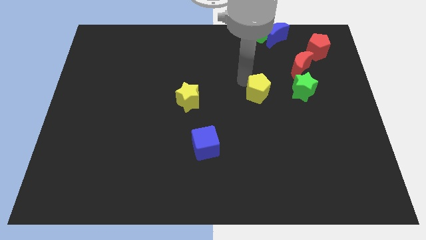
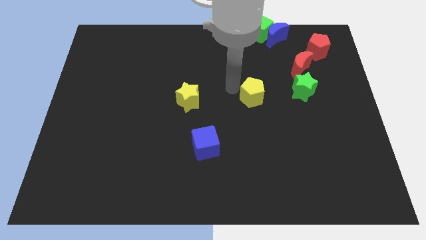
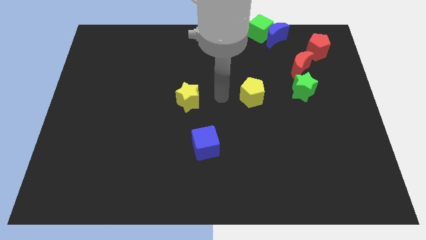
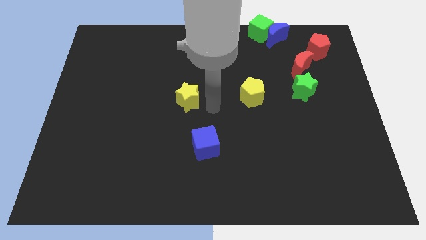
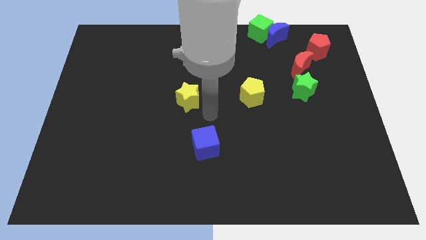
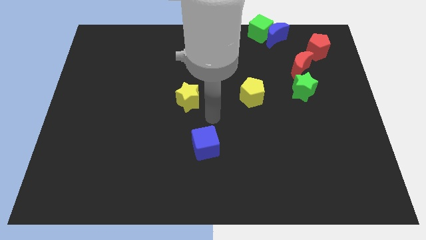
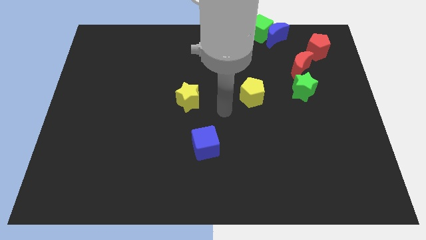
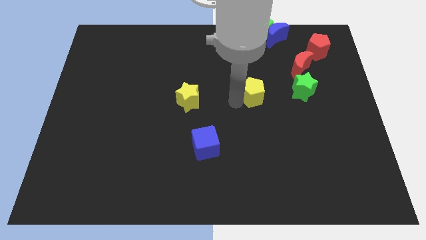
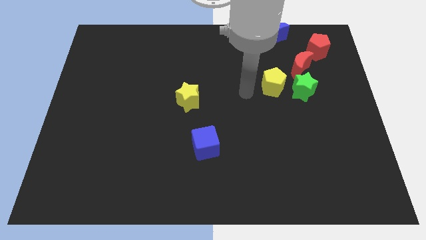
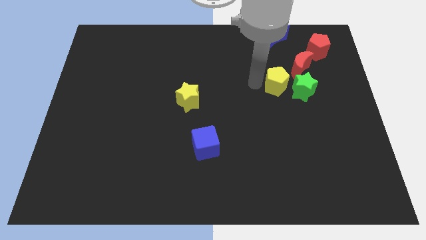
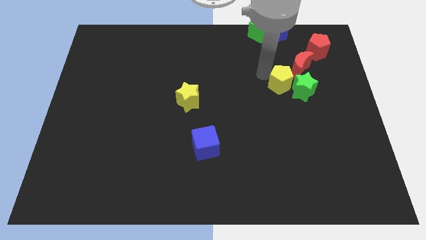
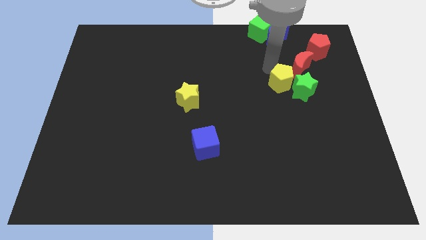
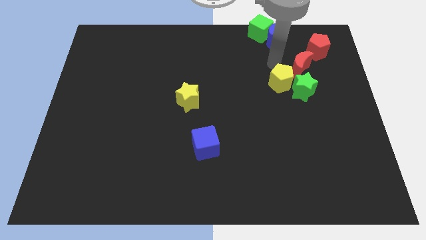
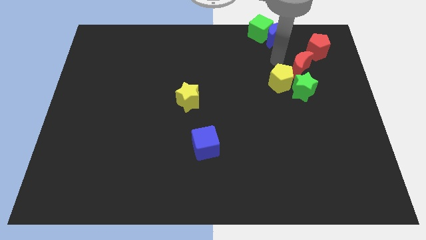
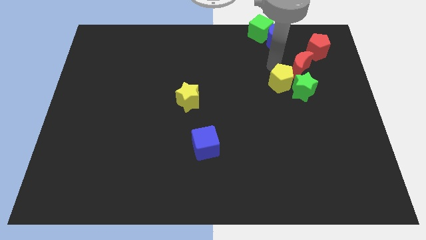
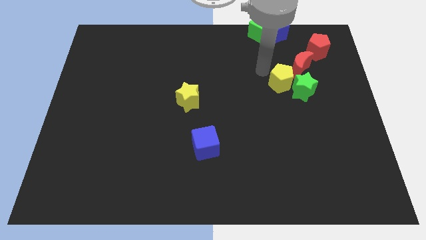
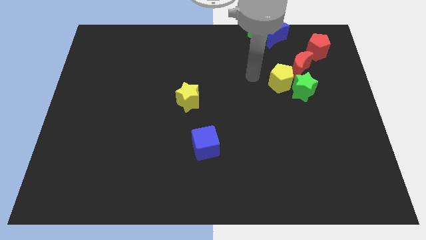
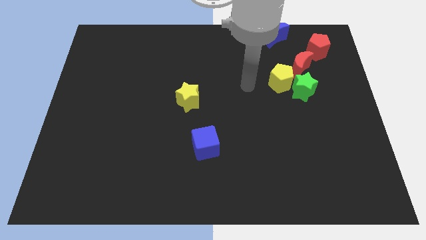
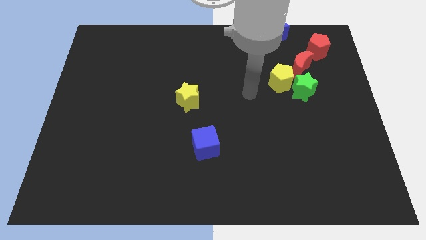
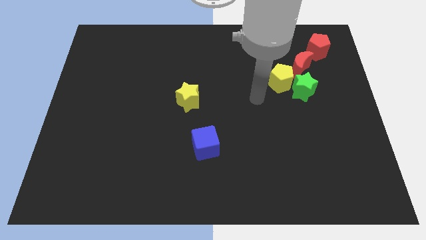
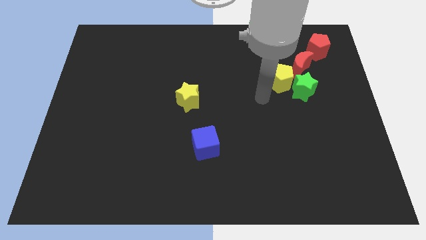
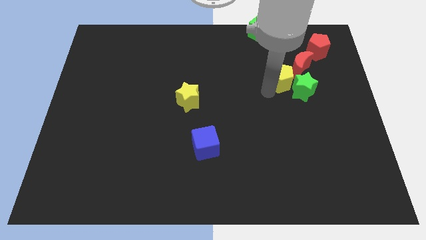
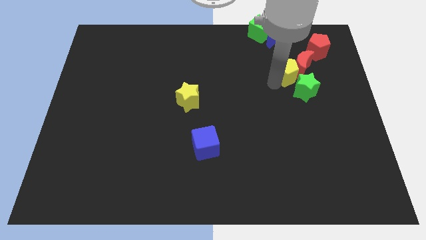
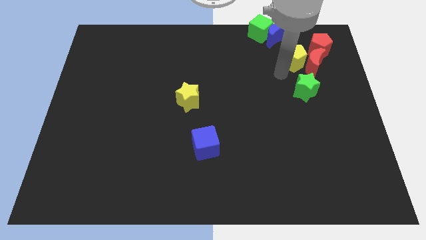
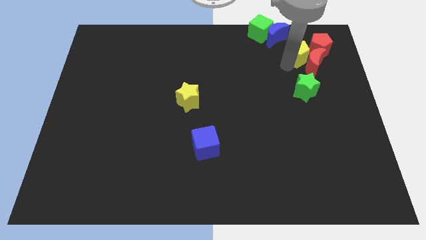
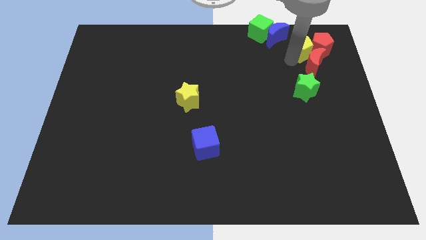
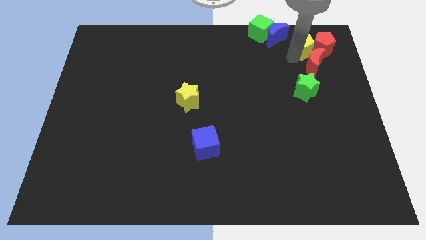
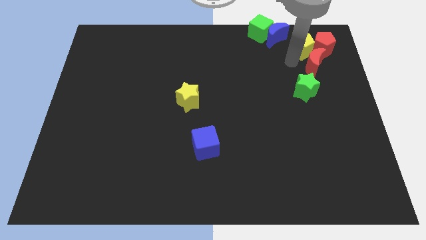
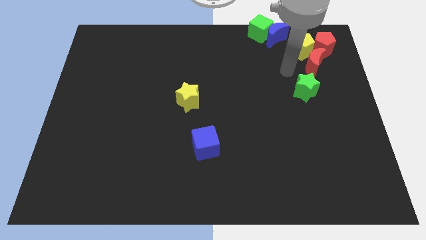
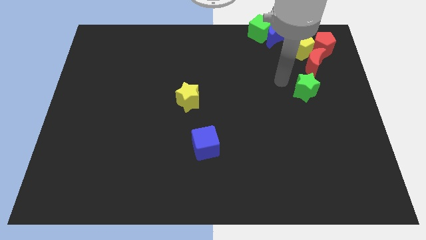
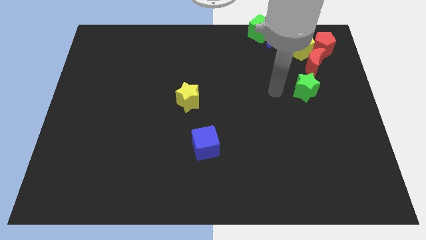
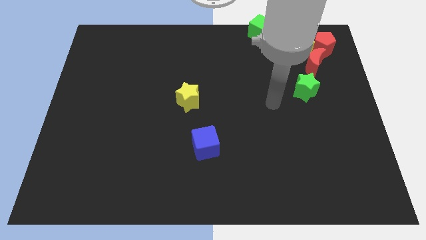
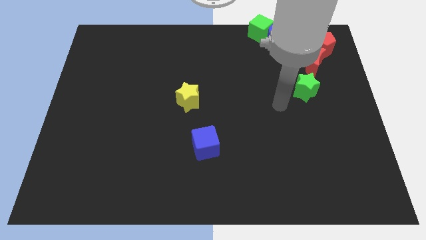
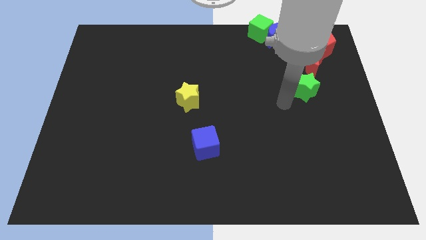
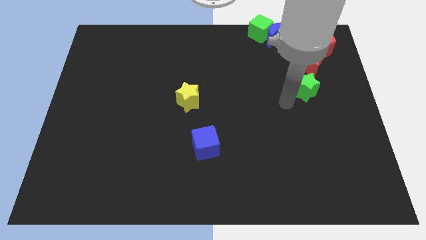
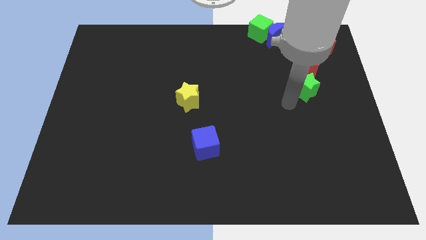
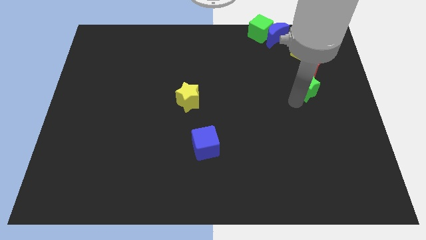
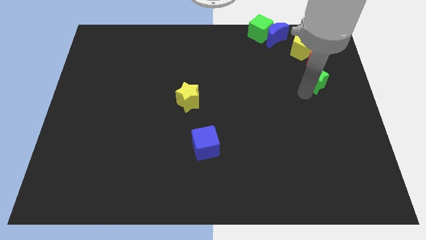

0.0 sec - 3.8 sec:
place the yellow pentagon to the left of the red pentagon

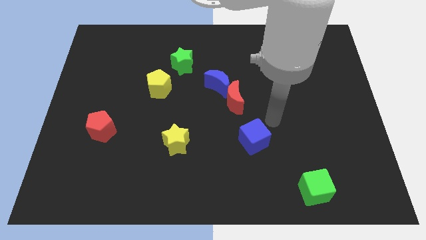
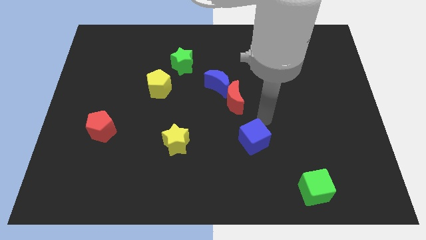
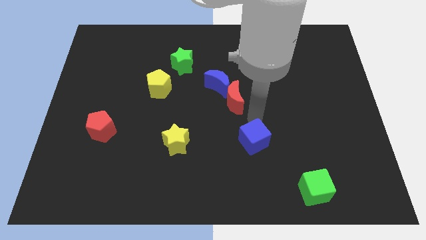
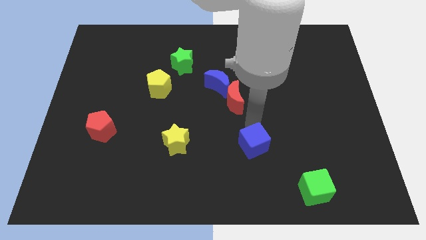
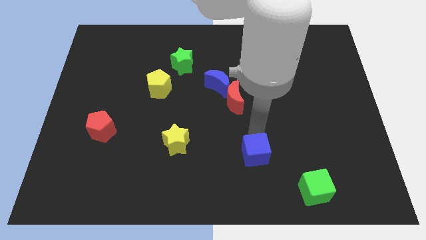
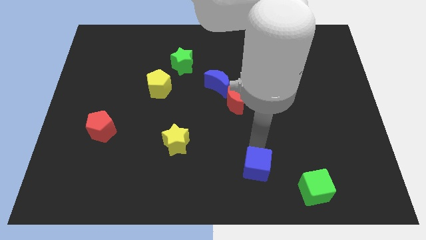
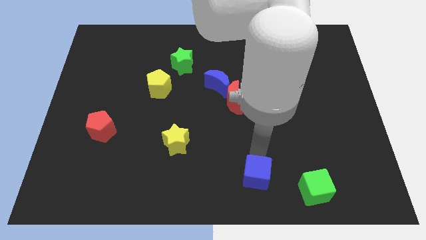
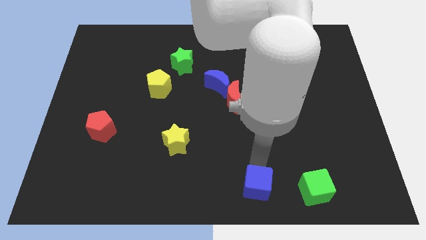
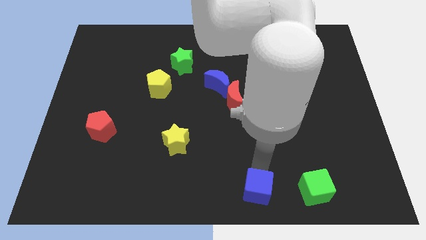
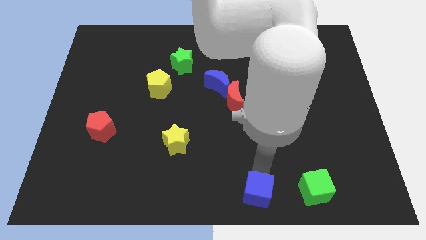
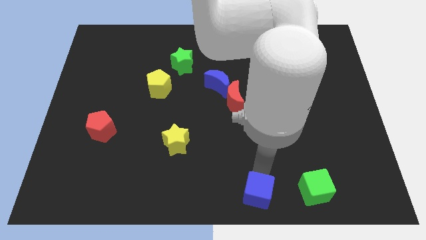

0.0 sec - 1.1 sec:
place the blue cube parallel to green cube

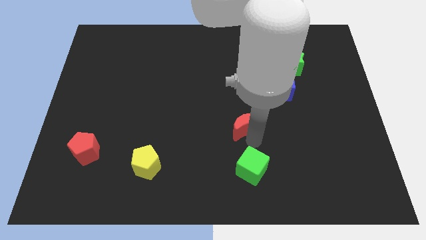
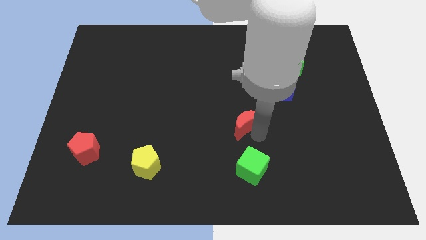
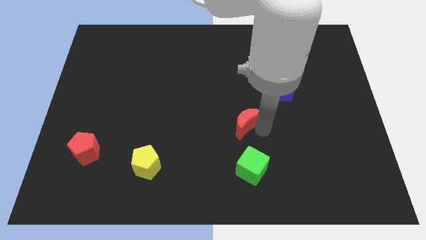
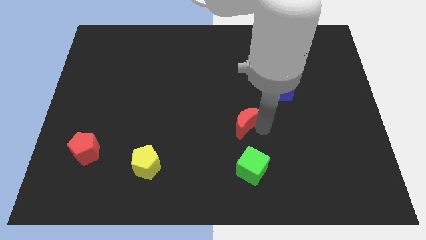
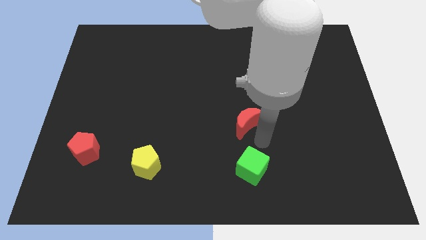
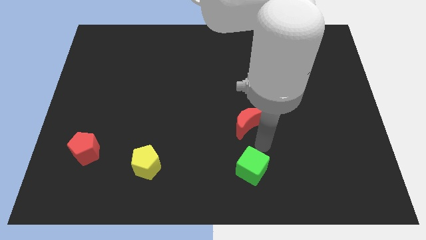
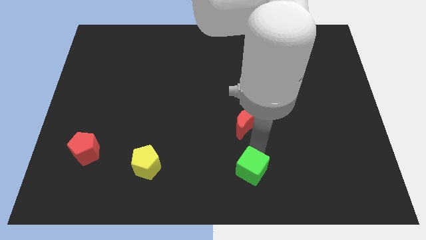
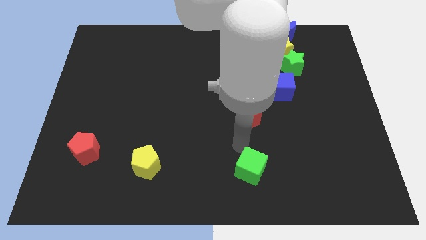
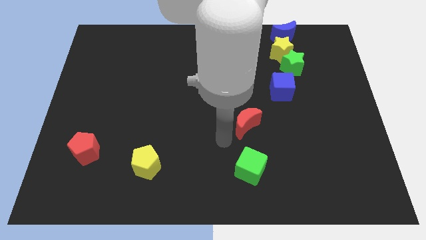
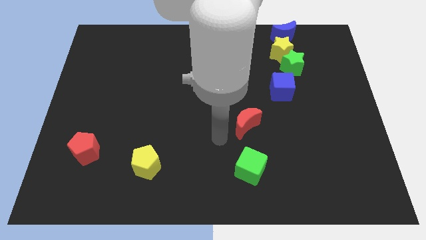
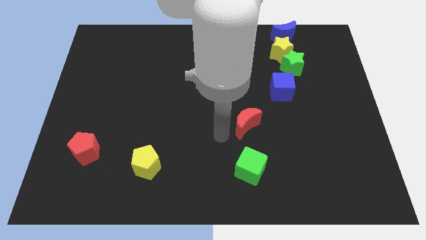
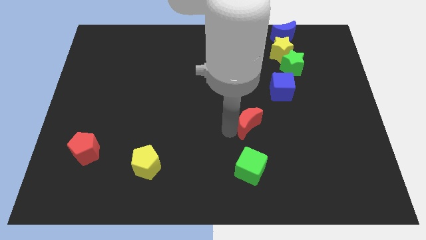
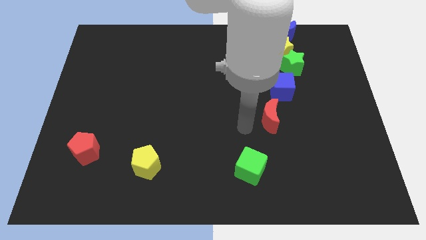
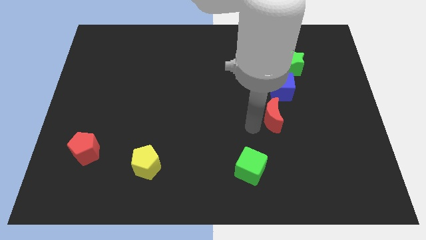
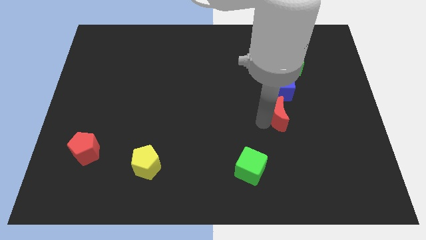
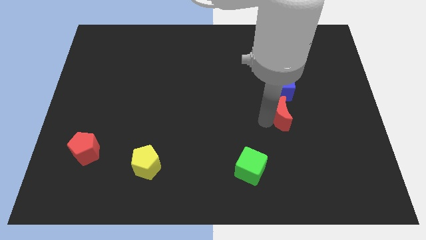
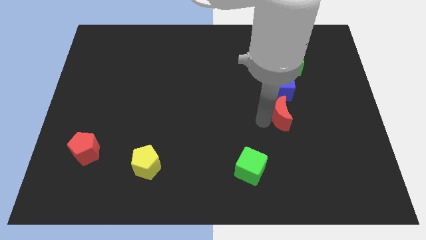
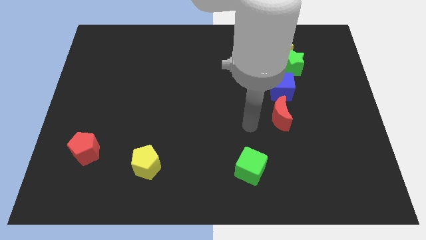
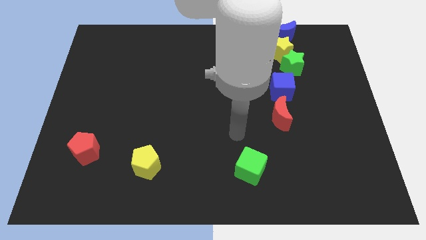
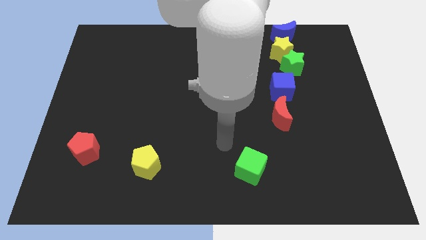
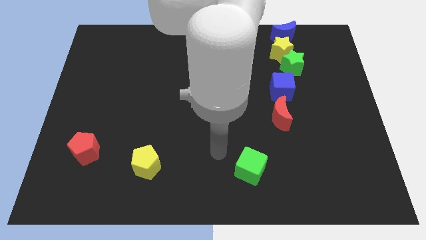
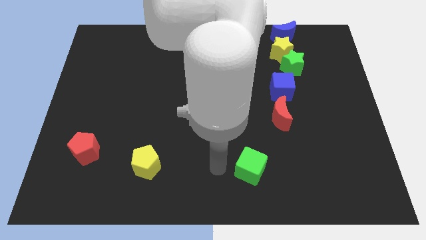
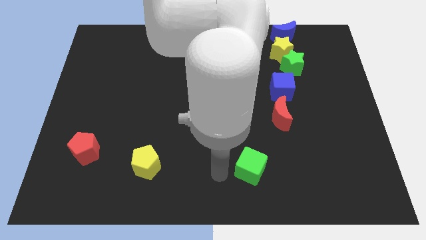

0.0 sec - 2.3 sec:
place the red moon below blue cube
